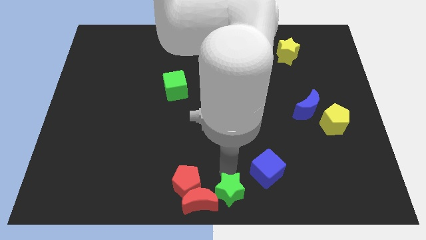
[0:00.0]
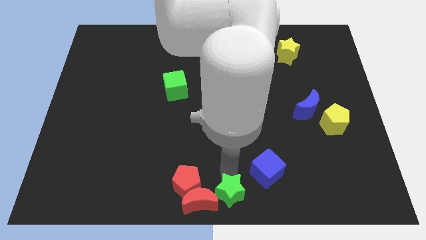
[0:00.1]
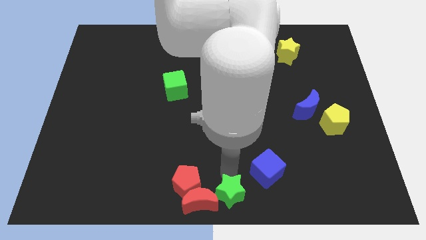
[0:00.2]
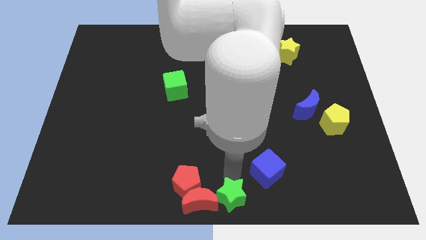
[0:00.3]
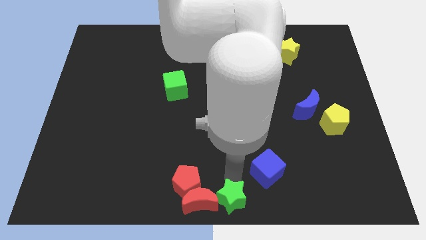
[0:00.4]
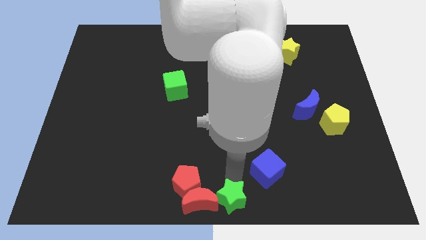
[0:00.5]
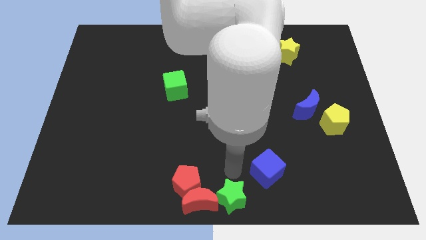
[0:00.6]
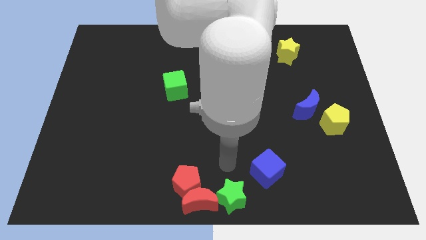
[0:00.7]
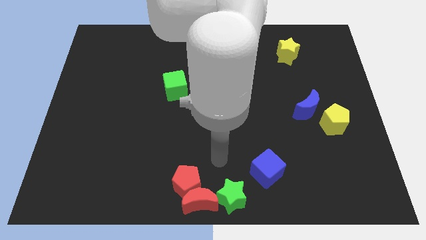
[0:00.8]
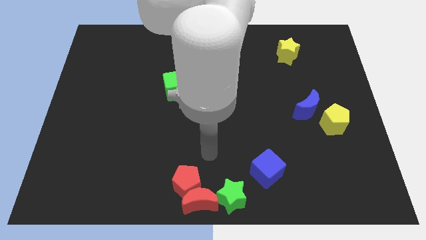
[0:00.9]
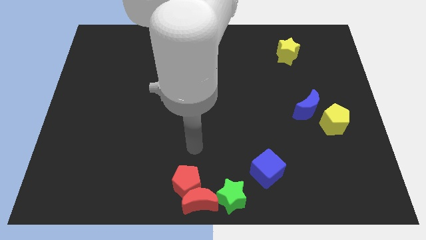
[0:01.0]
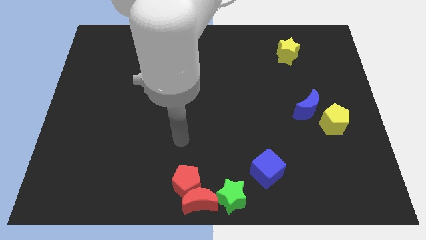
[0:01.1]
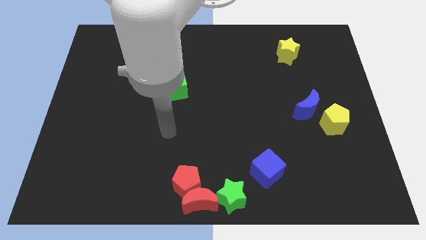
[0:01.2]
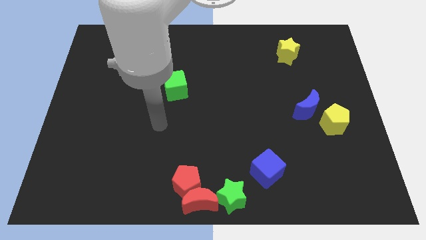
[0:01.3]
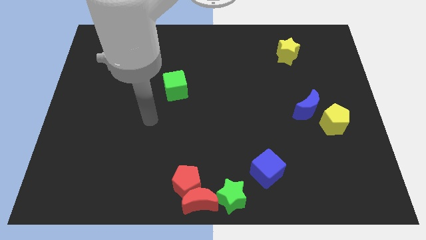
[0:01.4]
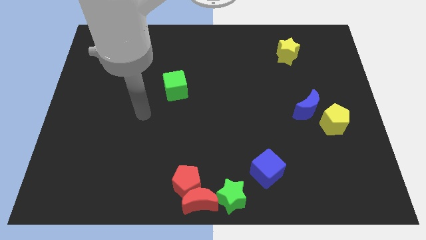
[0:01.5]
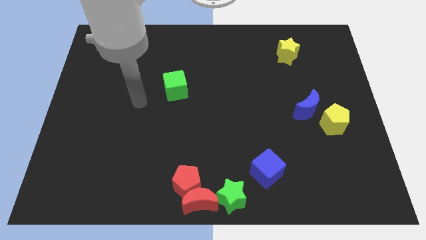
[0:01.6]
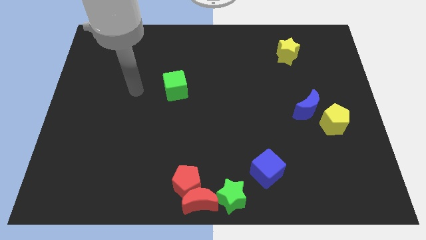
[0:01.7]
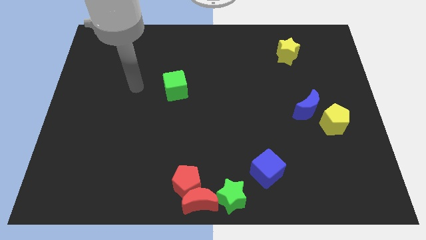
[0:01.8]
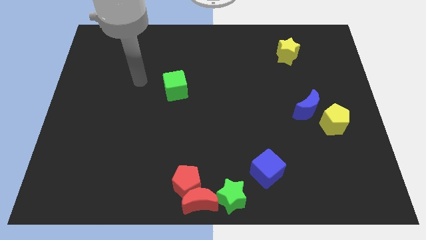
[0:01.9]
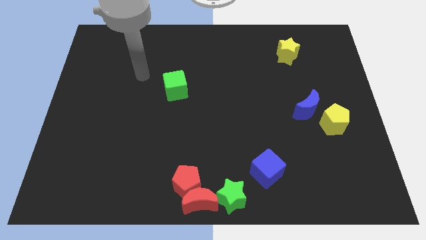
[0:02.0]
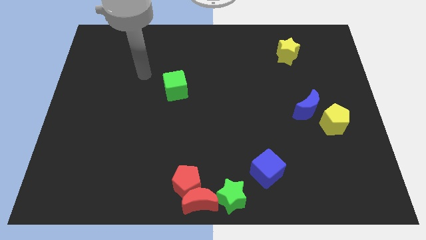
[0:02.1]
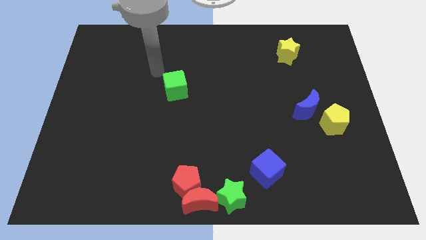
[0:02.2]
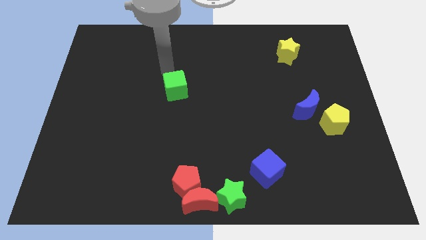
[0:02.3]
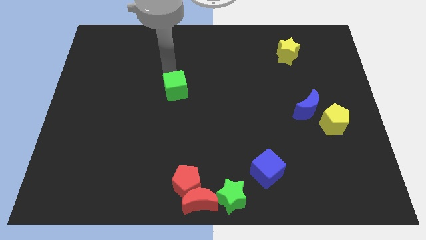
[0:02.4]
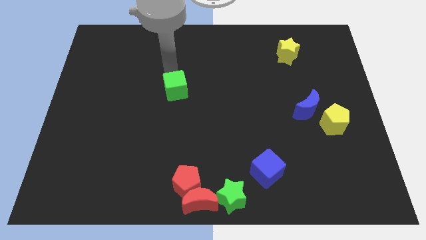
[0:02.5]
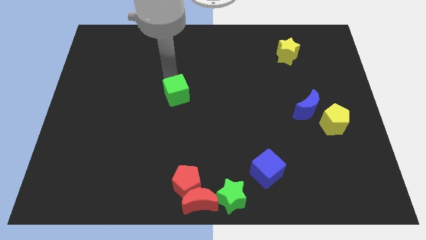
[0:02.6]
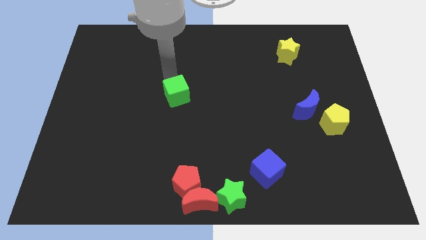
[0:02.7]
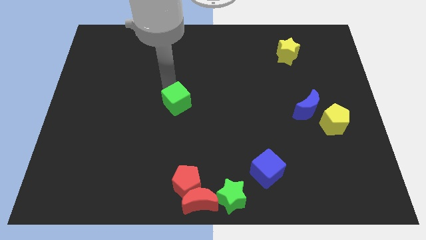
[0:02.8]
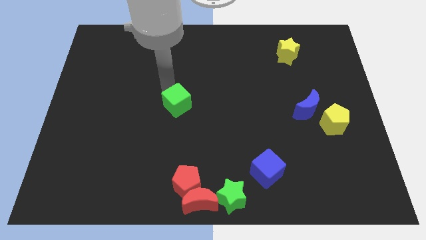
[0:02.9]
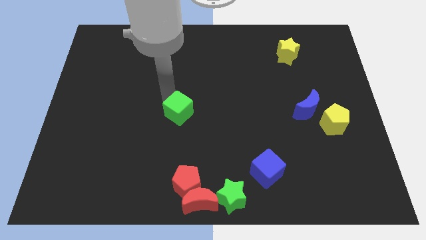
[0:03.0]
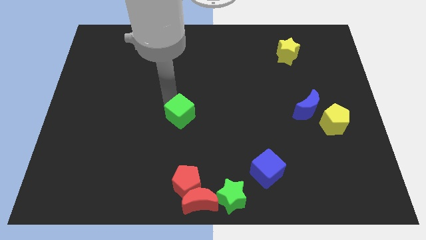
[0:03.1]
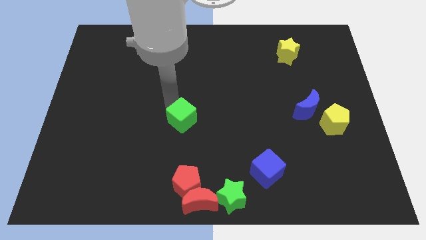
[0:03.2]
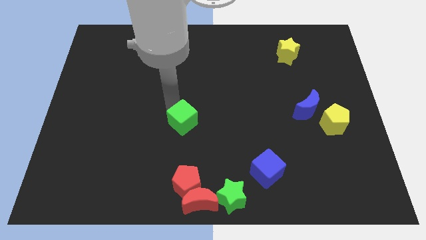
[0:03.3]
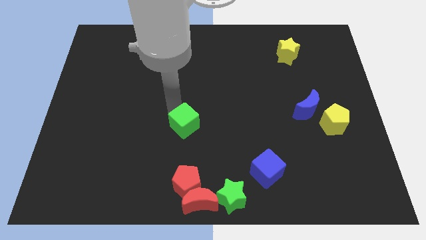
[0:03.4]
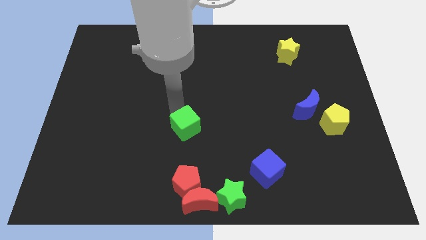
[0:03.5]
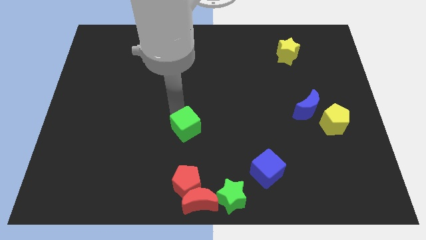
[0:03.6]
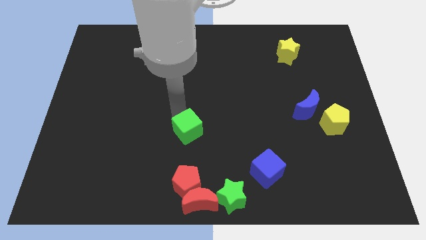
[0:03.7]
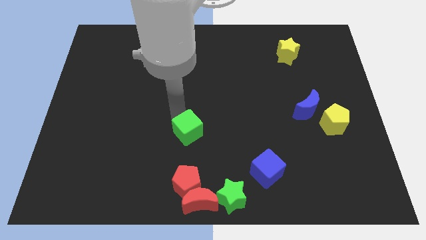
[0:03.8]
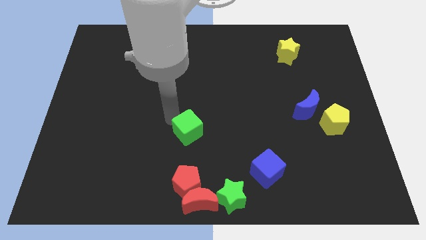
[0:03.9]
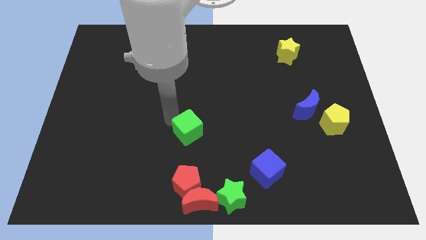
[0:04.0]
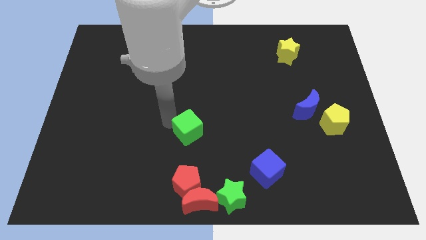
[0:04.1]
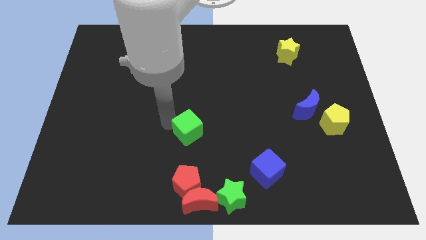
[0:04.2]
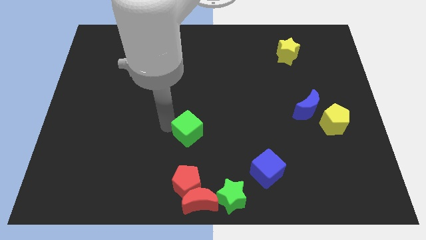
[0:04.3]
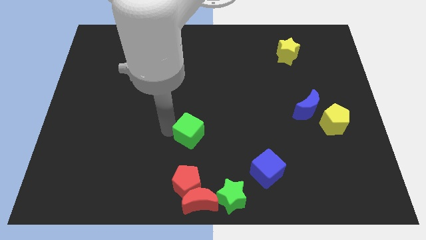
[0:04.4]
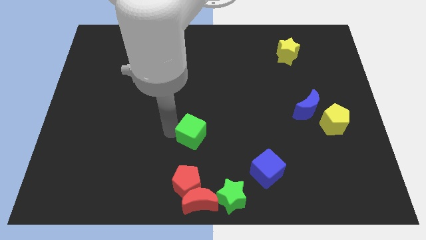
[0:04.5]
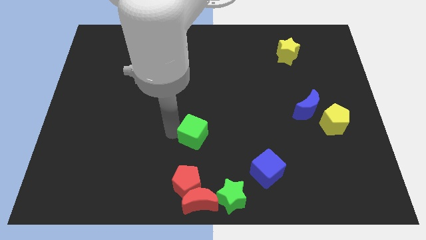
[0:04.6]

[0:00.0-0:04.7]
place the green cube at the top of the red pentagon

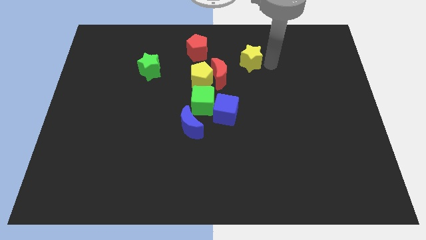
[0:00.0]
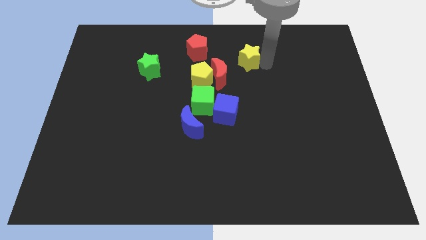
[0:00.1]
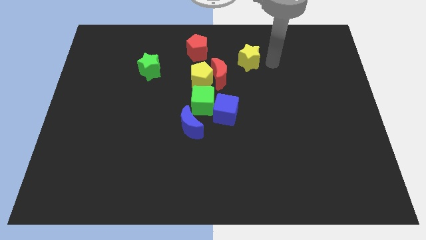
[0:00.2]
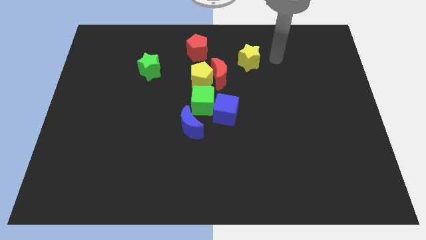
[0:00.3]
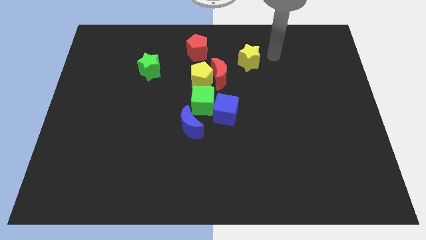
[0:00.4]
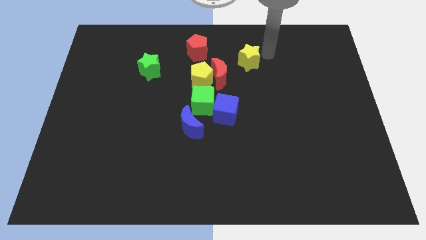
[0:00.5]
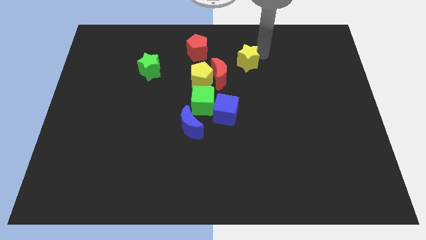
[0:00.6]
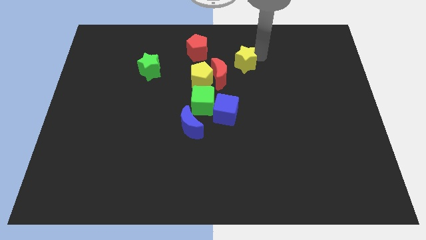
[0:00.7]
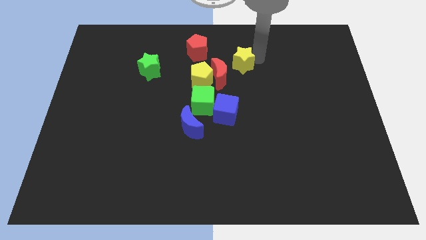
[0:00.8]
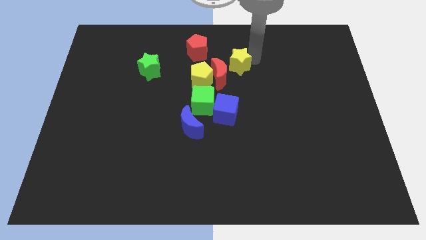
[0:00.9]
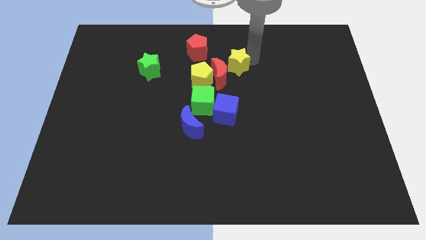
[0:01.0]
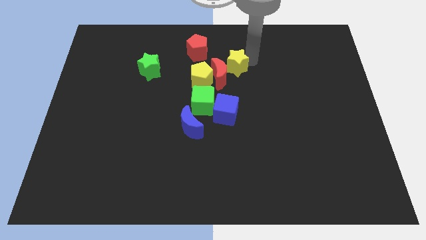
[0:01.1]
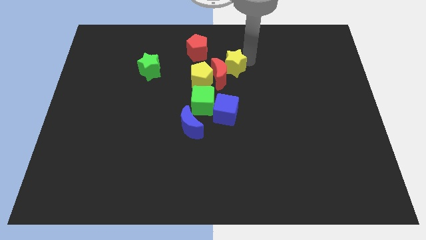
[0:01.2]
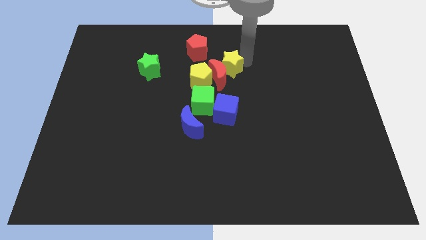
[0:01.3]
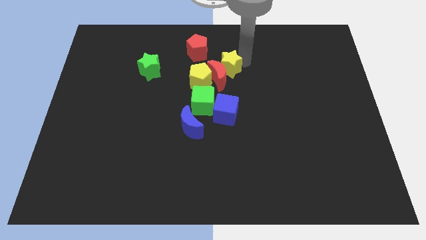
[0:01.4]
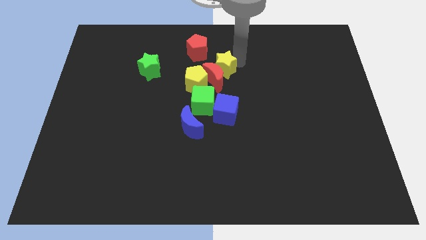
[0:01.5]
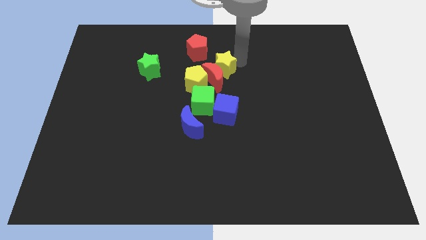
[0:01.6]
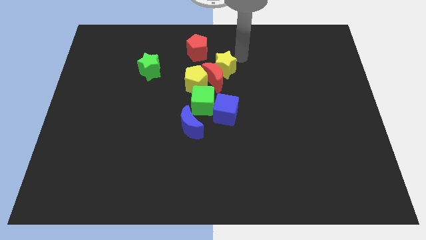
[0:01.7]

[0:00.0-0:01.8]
move yellow star into the red moon

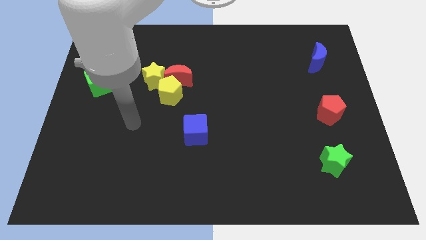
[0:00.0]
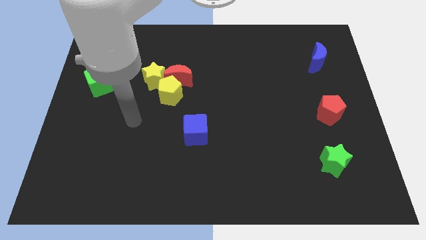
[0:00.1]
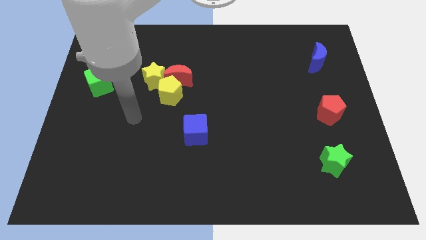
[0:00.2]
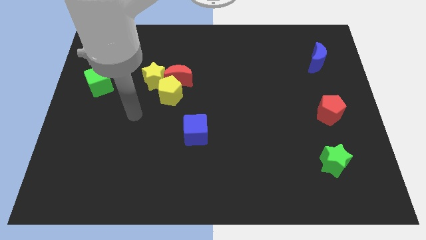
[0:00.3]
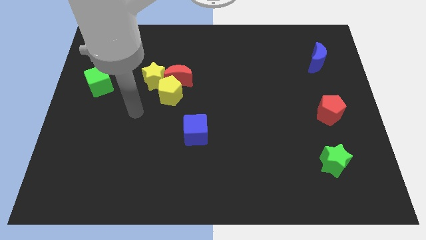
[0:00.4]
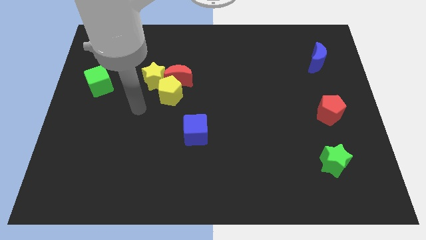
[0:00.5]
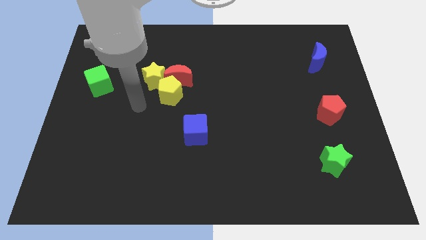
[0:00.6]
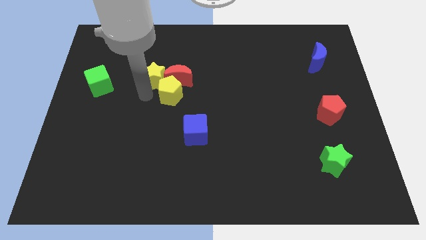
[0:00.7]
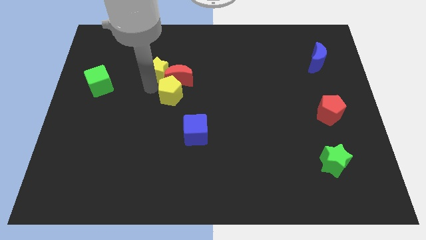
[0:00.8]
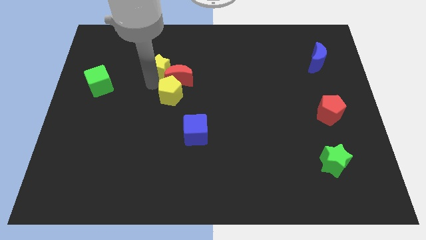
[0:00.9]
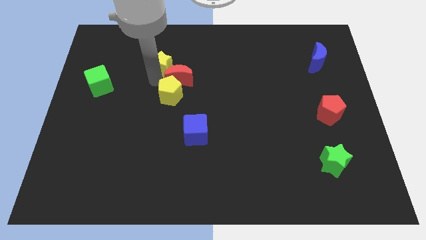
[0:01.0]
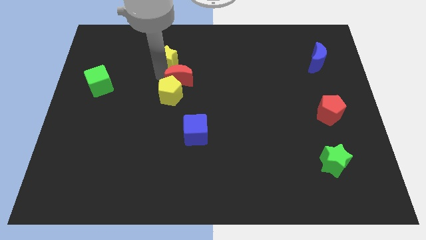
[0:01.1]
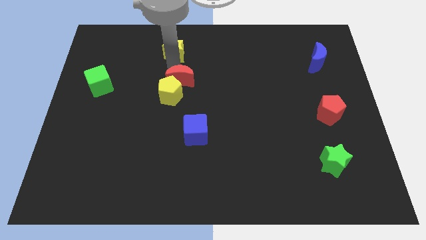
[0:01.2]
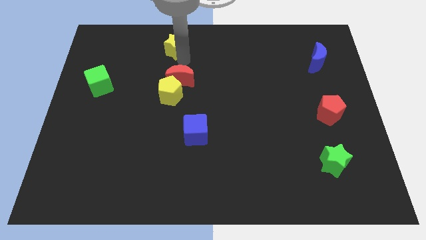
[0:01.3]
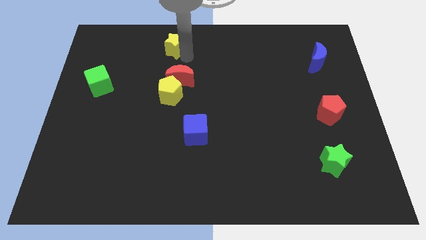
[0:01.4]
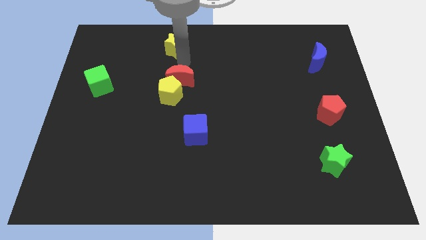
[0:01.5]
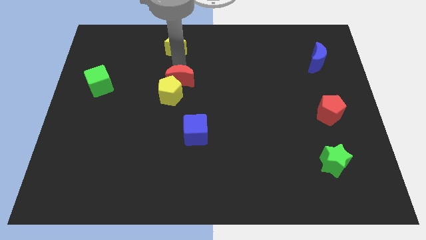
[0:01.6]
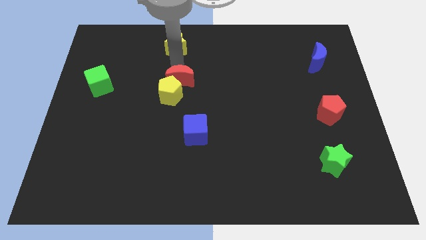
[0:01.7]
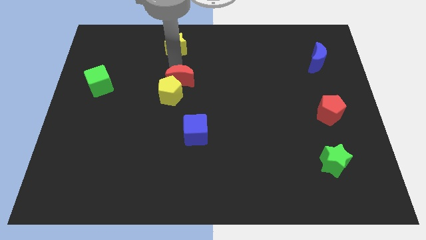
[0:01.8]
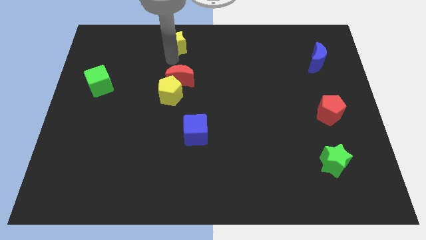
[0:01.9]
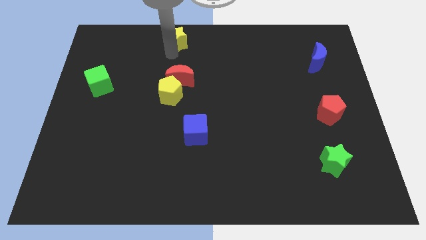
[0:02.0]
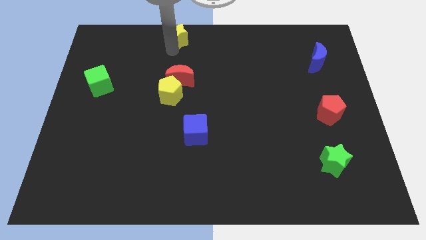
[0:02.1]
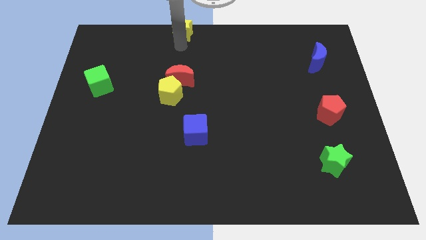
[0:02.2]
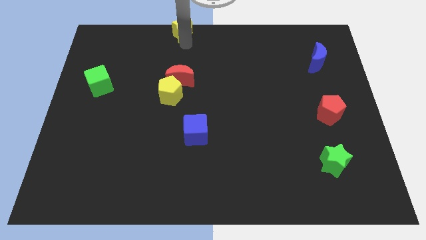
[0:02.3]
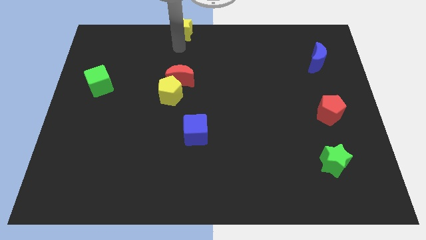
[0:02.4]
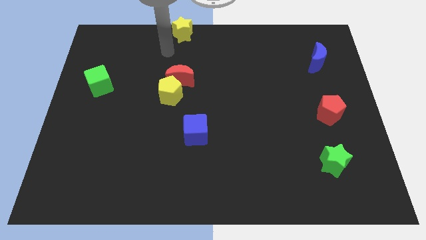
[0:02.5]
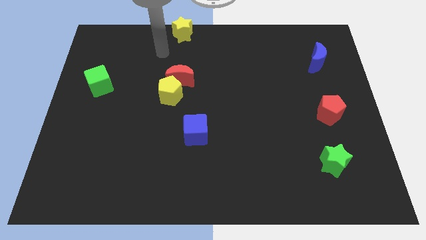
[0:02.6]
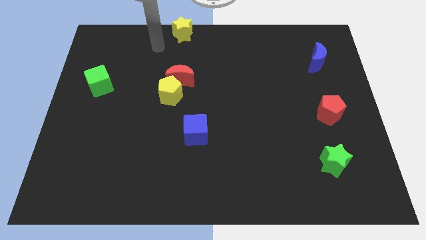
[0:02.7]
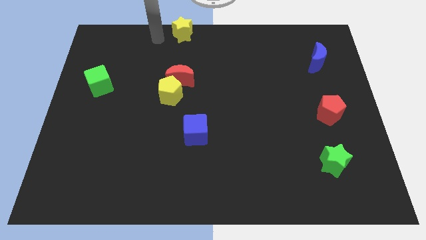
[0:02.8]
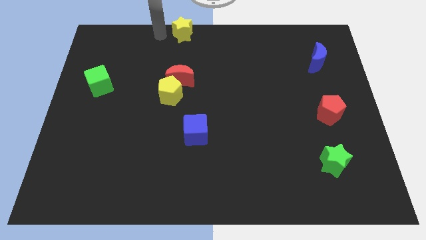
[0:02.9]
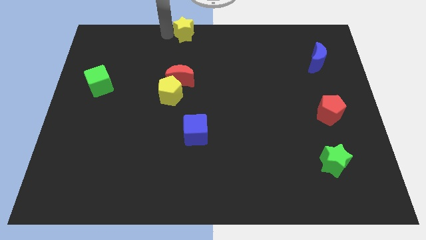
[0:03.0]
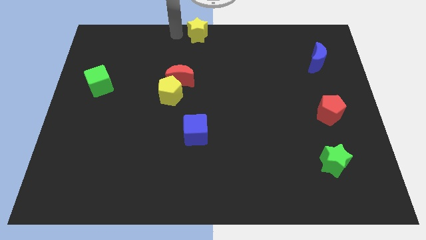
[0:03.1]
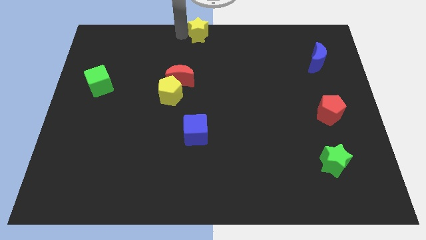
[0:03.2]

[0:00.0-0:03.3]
put the yellow star at the top center
